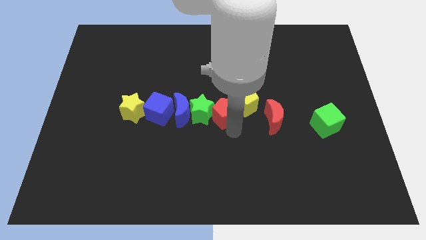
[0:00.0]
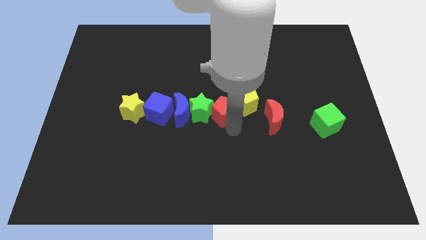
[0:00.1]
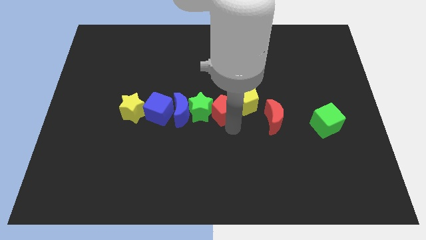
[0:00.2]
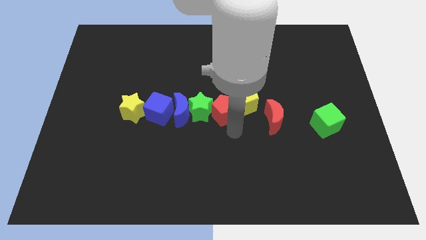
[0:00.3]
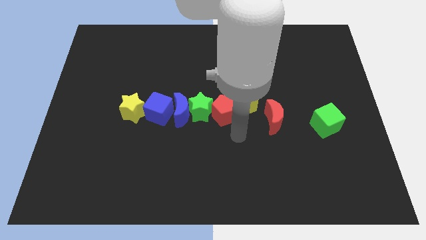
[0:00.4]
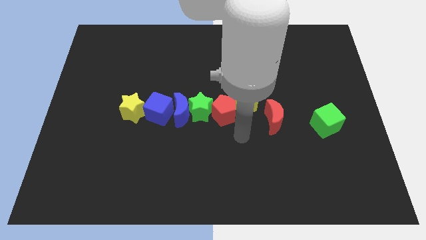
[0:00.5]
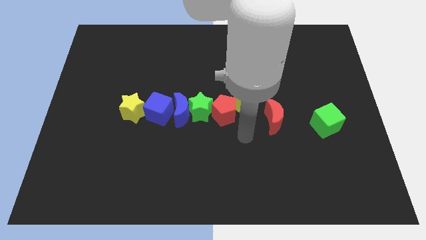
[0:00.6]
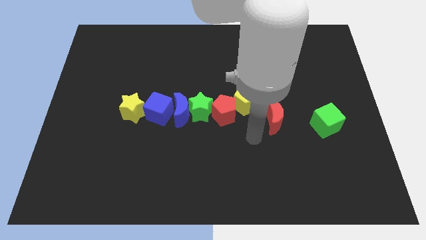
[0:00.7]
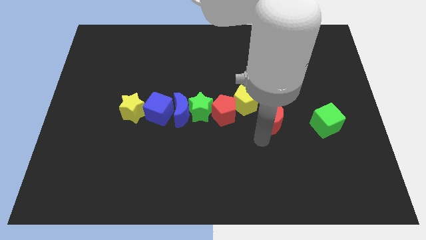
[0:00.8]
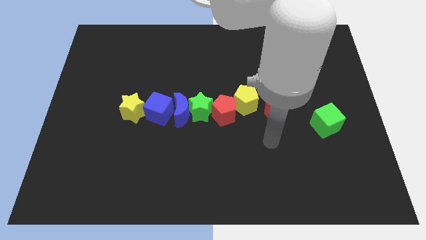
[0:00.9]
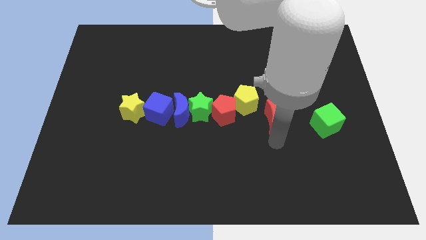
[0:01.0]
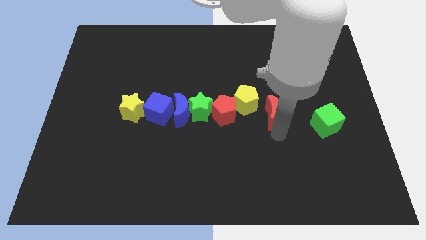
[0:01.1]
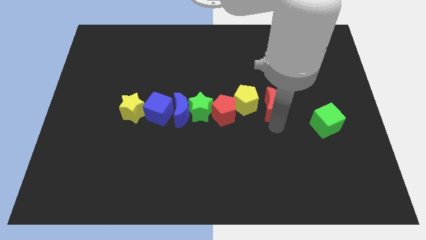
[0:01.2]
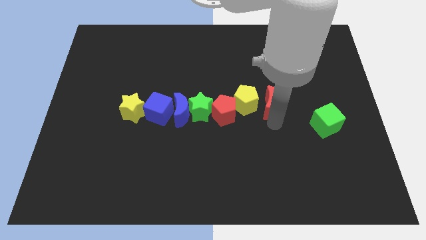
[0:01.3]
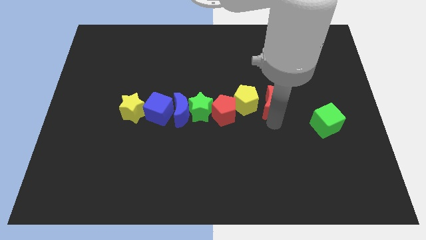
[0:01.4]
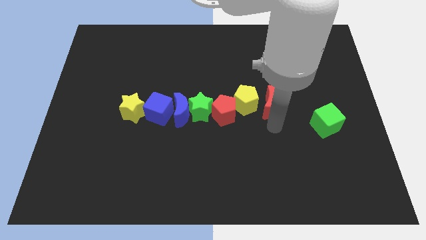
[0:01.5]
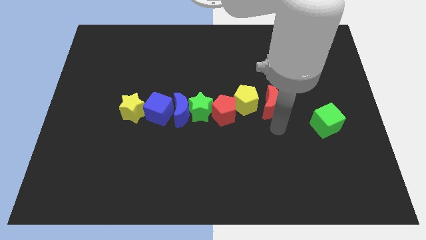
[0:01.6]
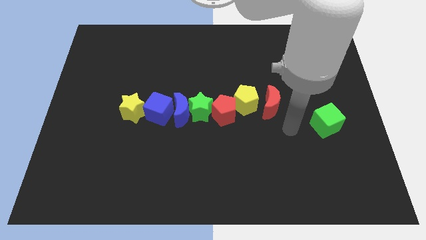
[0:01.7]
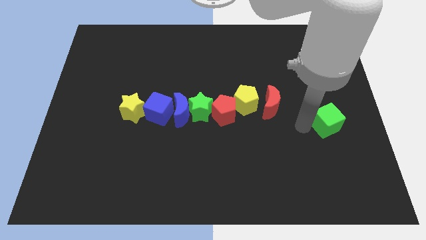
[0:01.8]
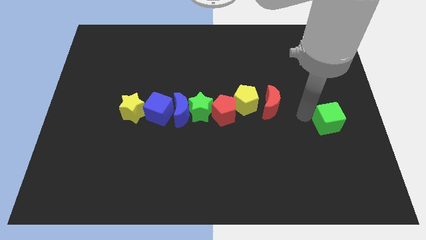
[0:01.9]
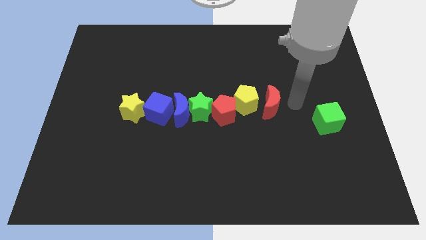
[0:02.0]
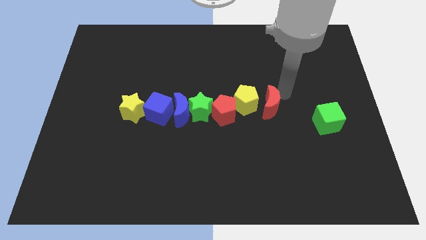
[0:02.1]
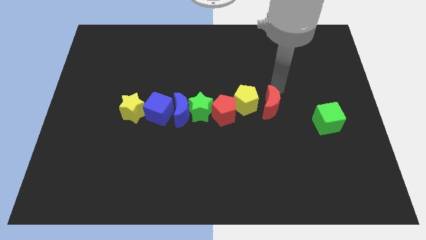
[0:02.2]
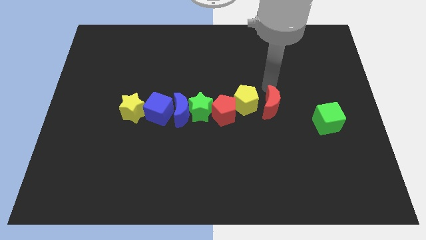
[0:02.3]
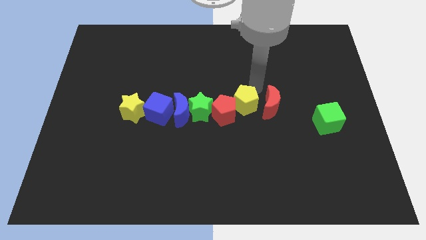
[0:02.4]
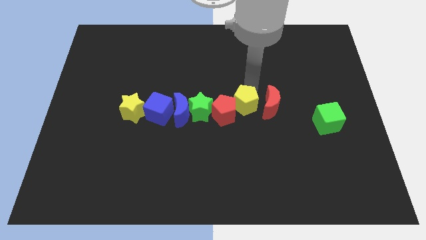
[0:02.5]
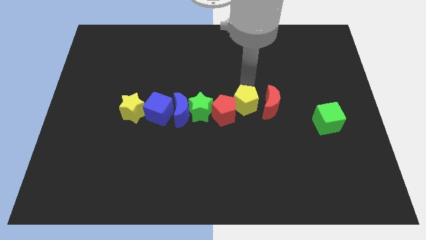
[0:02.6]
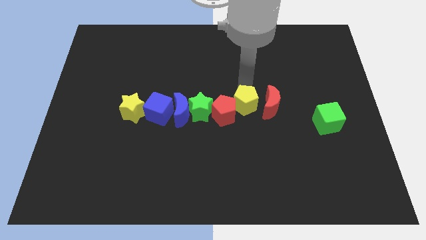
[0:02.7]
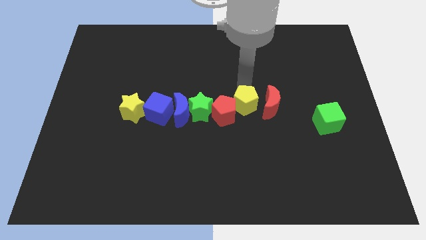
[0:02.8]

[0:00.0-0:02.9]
point your arm above the yellow pentagon

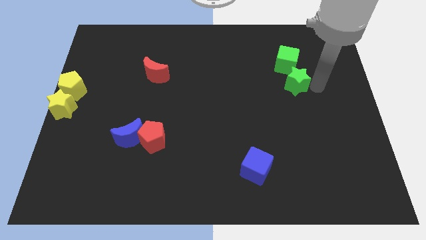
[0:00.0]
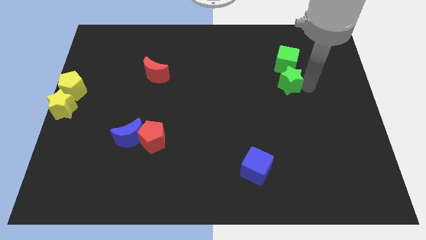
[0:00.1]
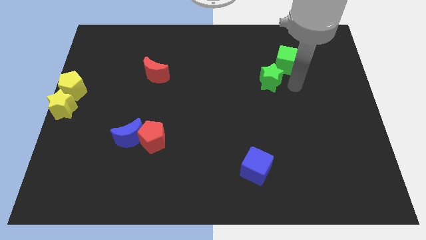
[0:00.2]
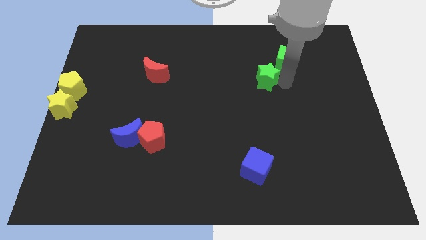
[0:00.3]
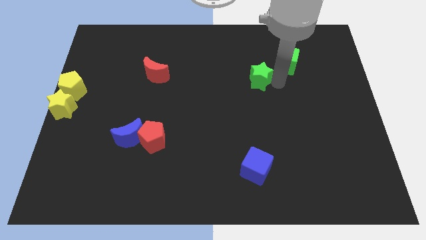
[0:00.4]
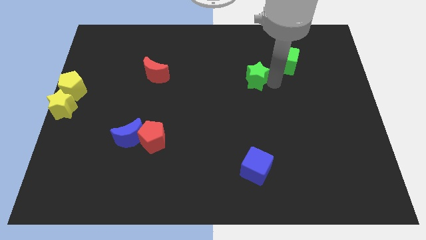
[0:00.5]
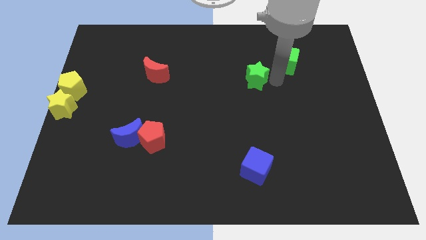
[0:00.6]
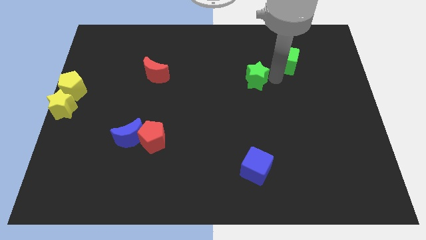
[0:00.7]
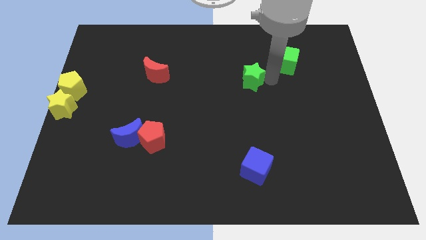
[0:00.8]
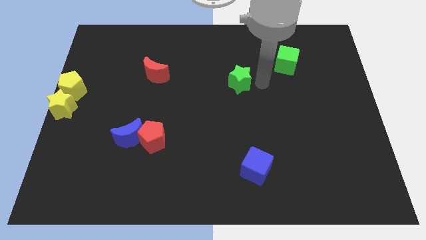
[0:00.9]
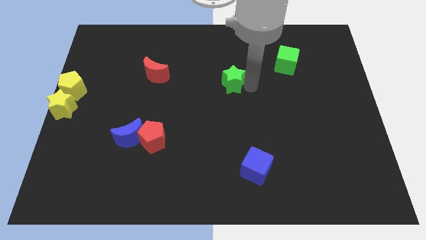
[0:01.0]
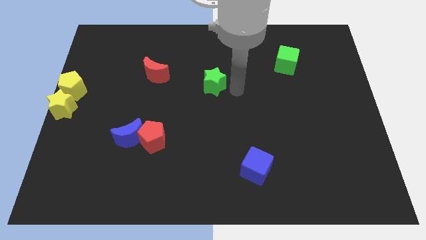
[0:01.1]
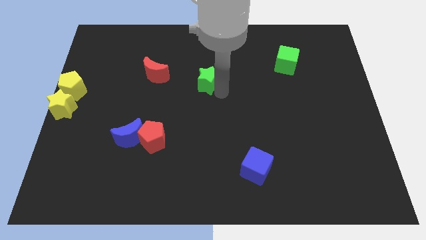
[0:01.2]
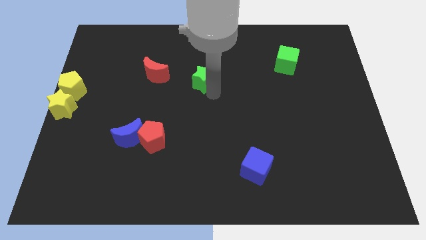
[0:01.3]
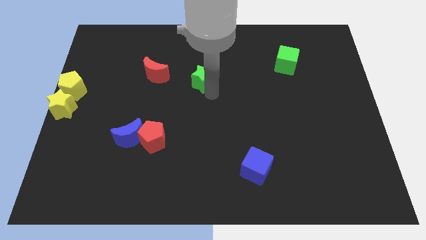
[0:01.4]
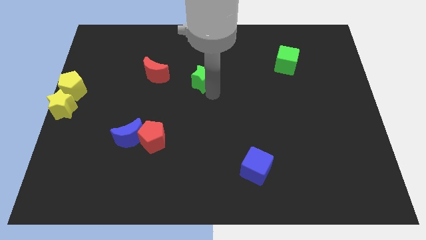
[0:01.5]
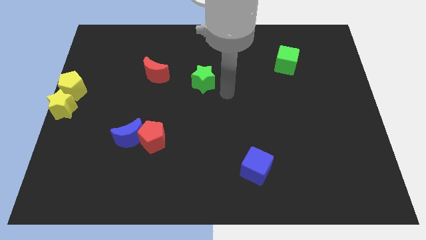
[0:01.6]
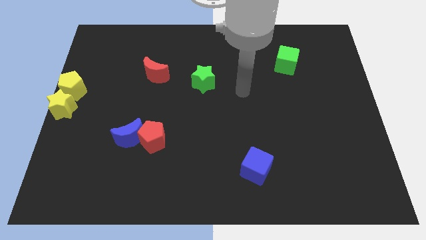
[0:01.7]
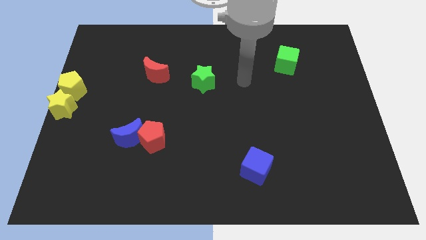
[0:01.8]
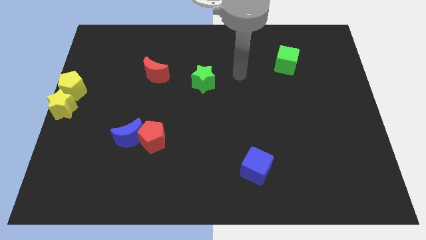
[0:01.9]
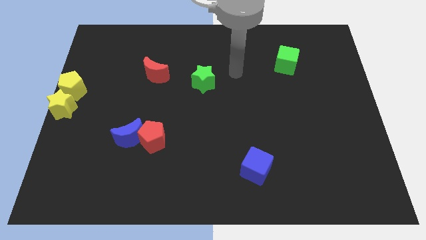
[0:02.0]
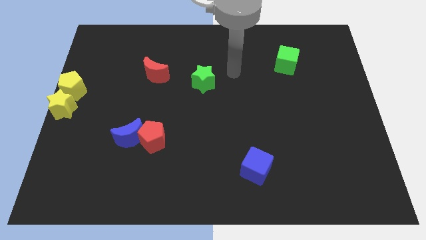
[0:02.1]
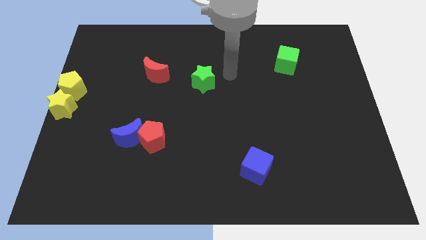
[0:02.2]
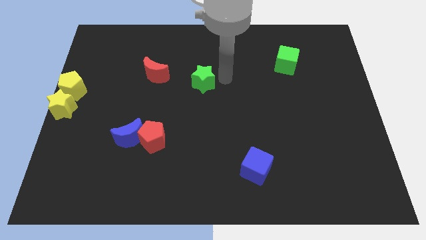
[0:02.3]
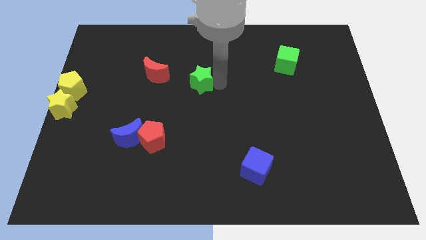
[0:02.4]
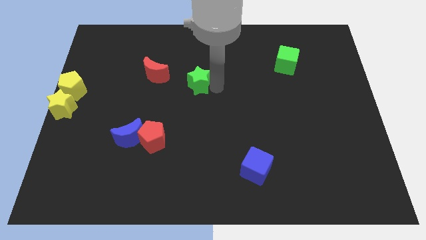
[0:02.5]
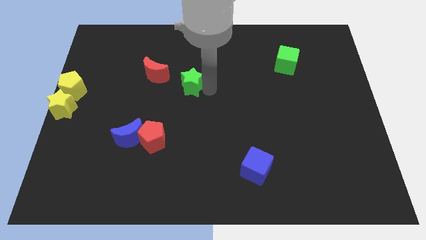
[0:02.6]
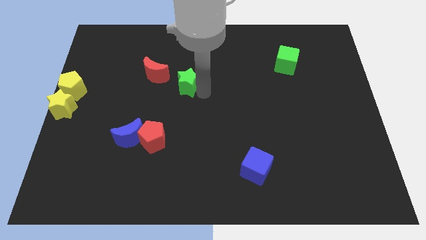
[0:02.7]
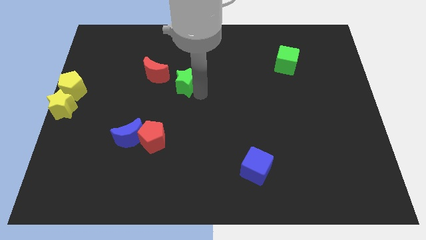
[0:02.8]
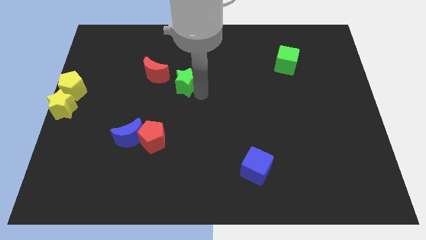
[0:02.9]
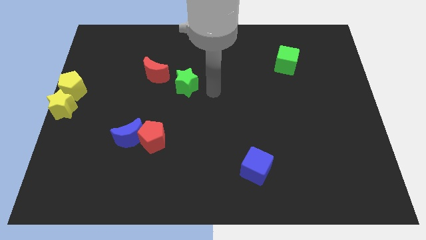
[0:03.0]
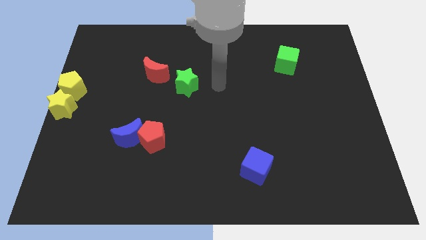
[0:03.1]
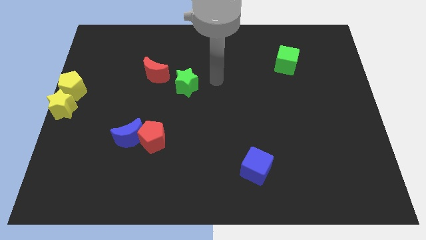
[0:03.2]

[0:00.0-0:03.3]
move the green star to the right of the red crescent

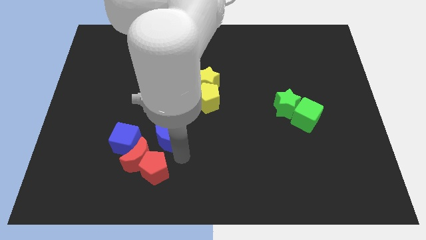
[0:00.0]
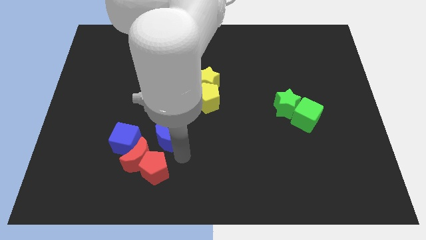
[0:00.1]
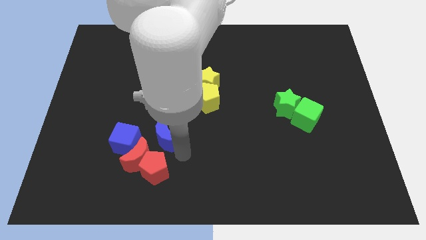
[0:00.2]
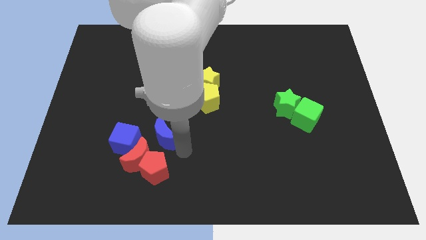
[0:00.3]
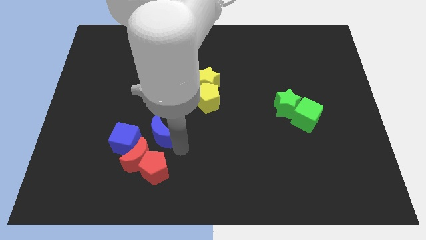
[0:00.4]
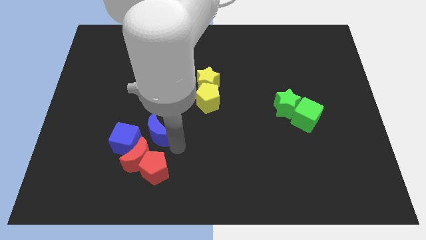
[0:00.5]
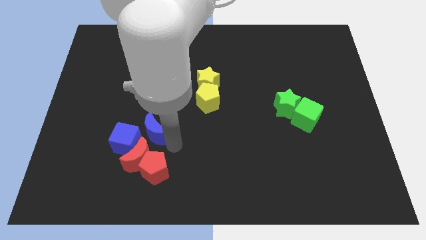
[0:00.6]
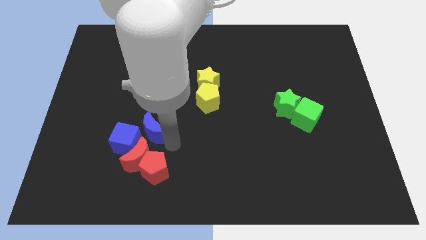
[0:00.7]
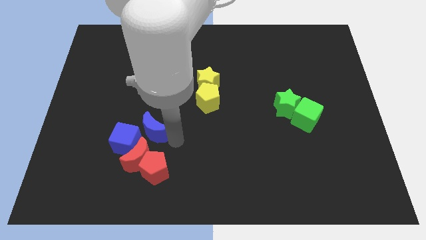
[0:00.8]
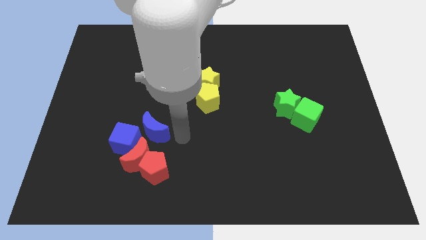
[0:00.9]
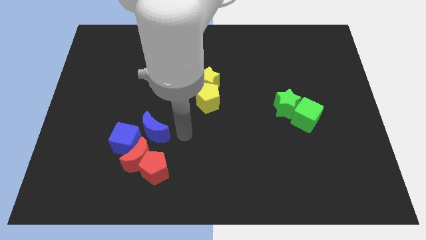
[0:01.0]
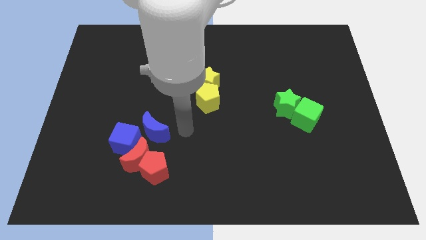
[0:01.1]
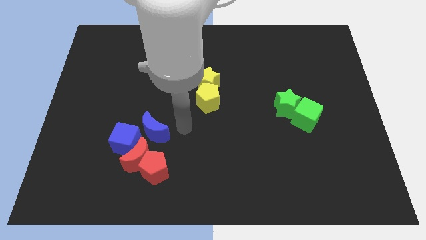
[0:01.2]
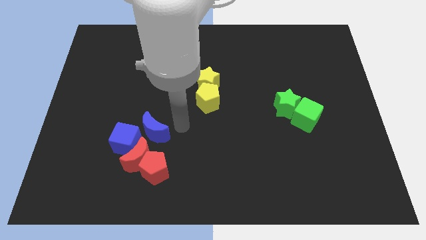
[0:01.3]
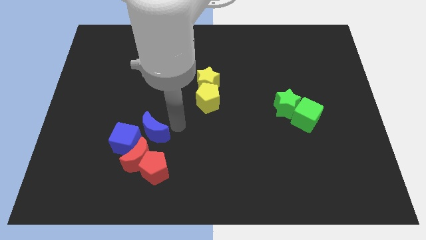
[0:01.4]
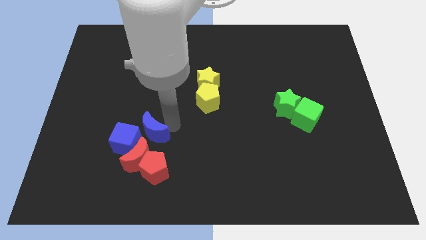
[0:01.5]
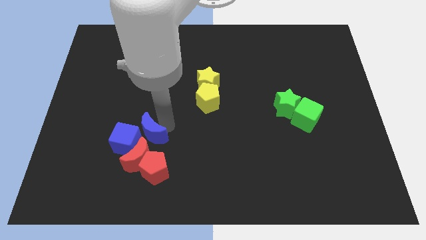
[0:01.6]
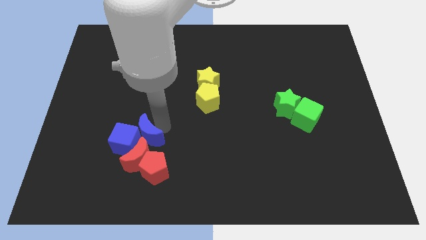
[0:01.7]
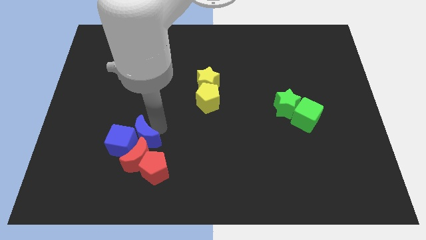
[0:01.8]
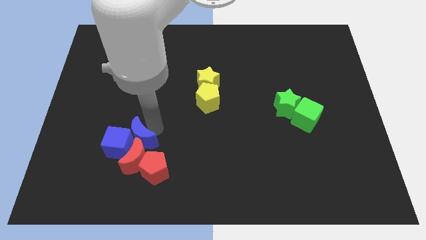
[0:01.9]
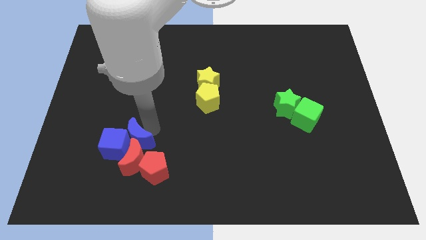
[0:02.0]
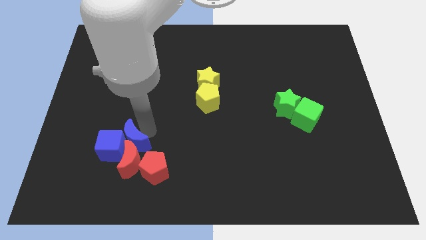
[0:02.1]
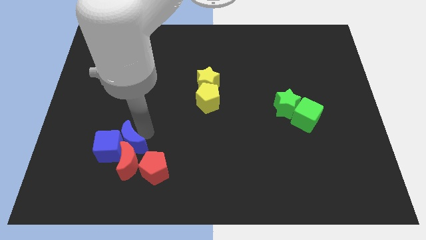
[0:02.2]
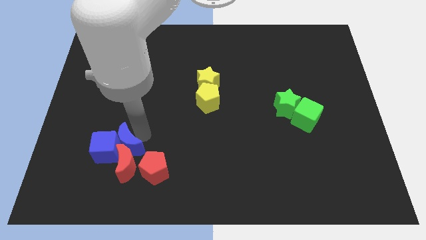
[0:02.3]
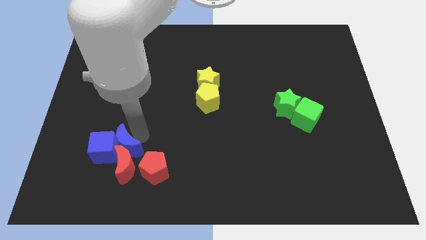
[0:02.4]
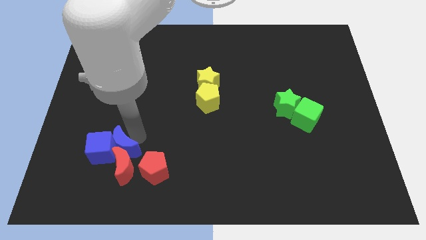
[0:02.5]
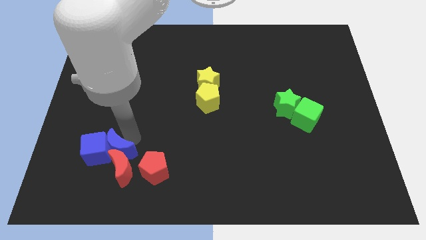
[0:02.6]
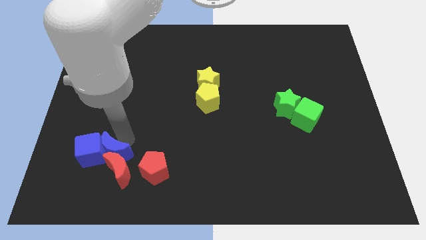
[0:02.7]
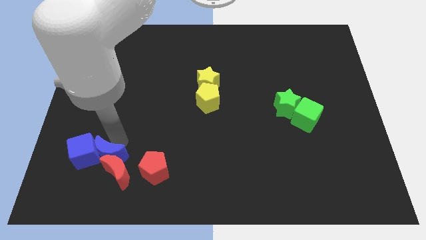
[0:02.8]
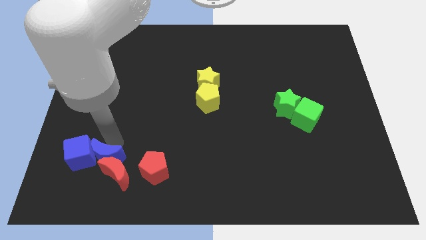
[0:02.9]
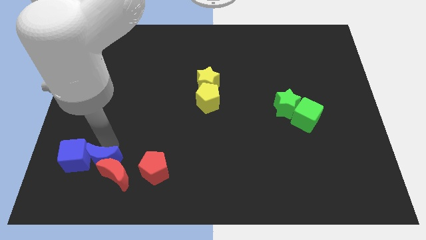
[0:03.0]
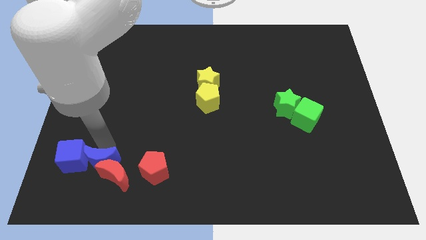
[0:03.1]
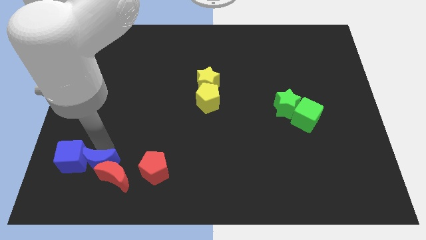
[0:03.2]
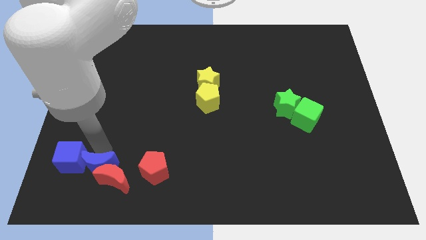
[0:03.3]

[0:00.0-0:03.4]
put the blue crescent to the right side of the blue cube
